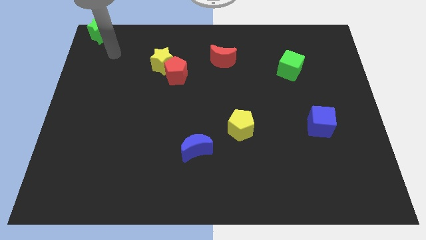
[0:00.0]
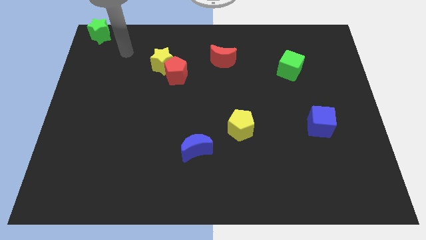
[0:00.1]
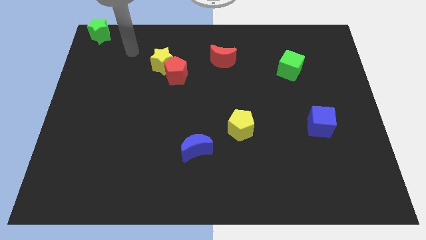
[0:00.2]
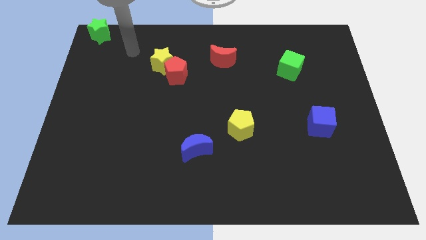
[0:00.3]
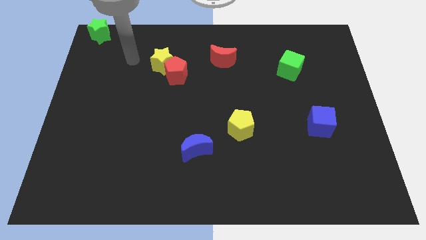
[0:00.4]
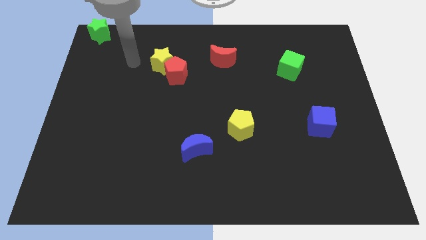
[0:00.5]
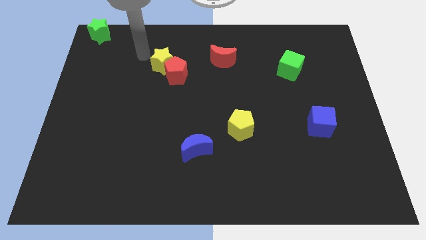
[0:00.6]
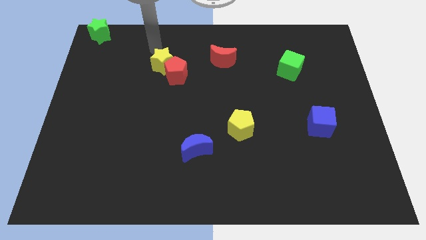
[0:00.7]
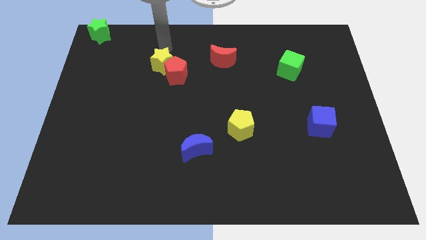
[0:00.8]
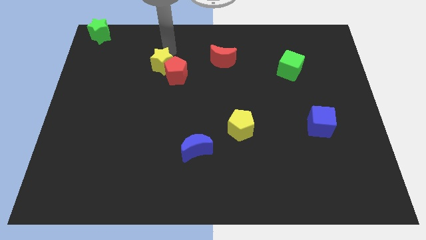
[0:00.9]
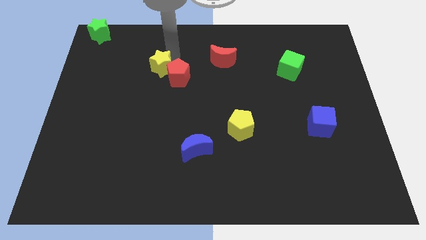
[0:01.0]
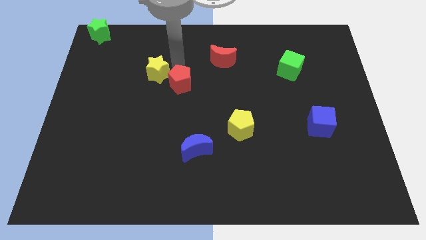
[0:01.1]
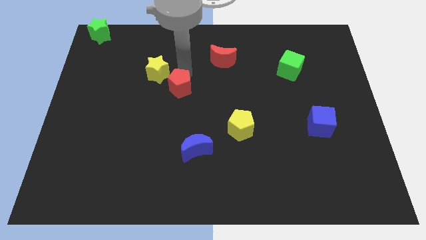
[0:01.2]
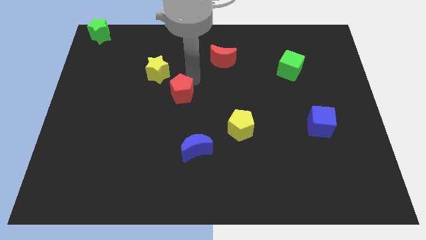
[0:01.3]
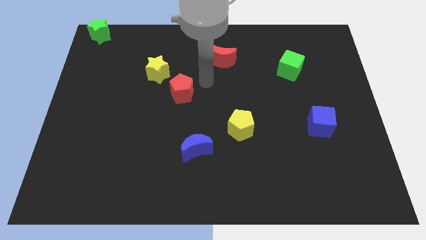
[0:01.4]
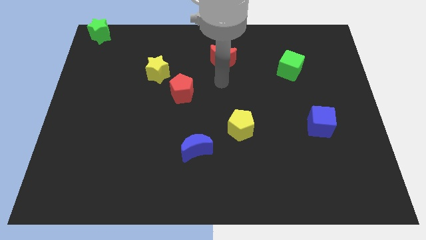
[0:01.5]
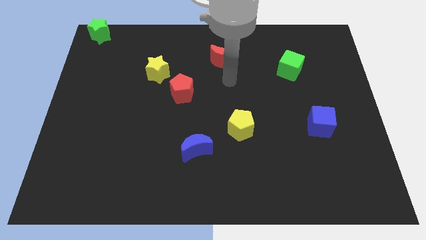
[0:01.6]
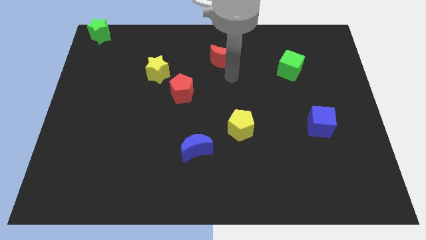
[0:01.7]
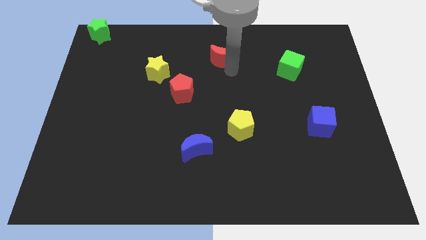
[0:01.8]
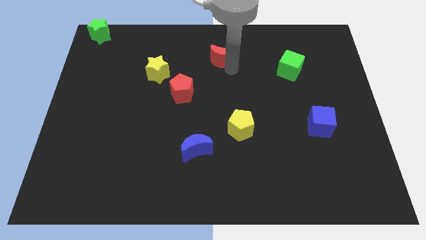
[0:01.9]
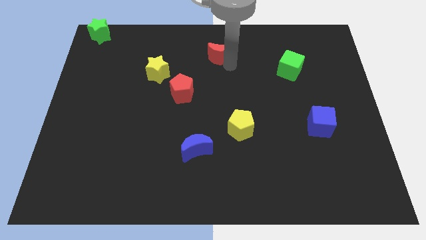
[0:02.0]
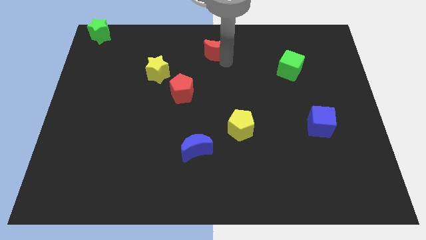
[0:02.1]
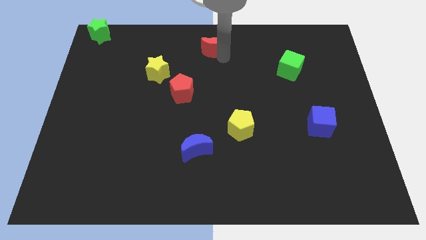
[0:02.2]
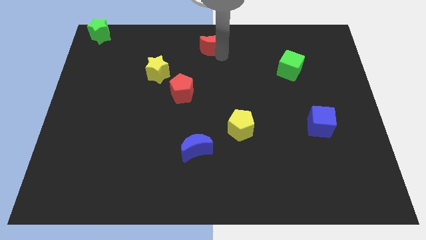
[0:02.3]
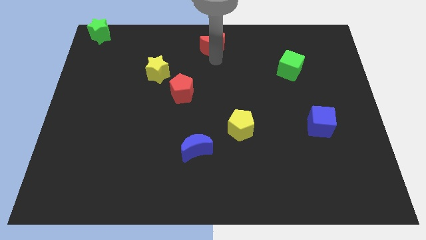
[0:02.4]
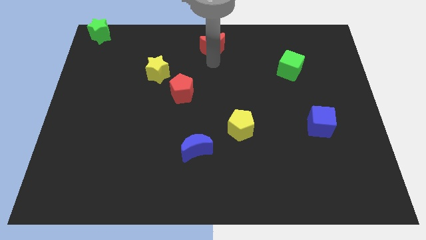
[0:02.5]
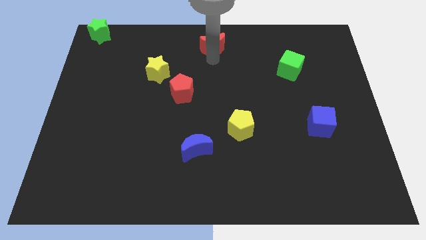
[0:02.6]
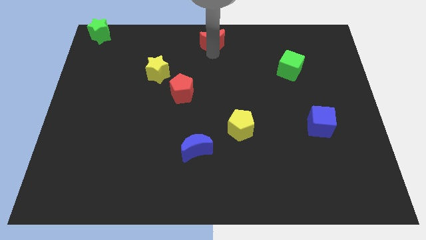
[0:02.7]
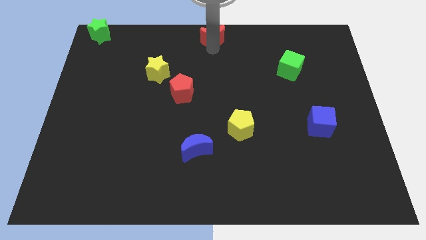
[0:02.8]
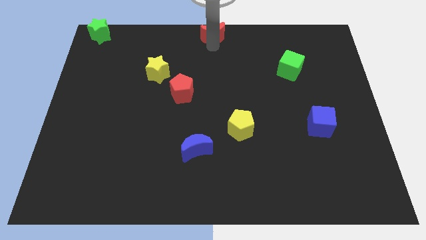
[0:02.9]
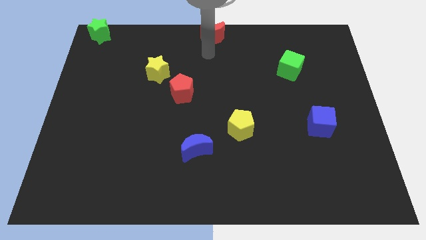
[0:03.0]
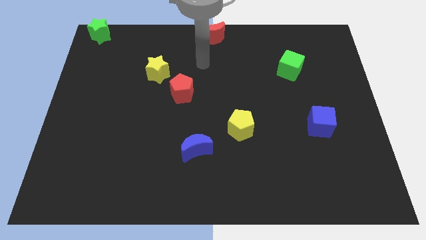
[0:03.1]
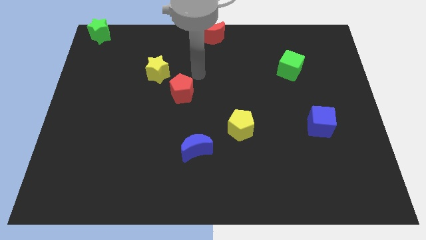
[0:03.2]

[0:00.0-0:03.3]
place the red moon at the top center of the board

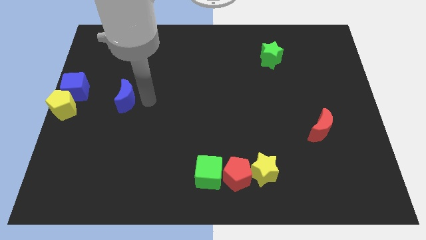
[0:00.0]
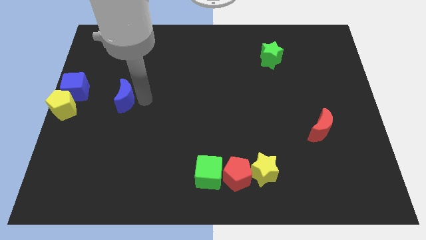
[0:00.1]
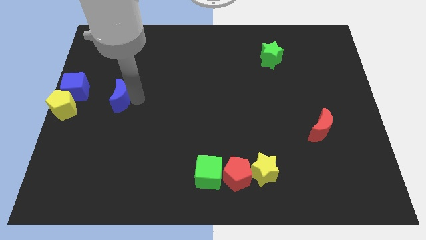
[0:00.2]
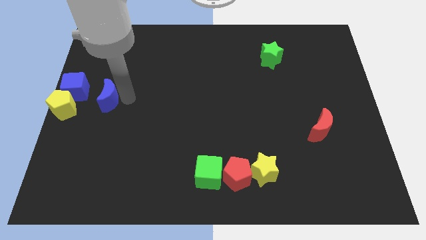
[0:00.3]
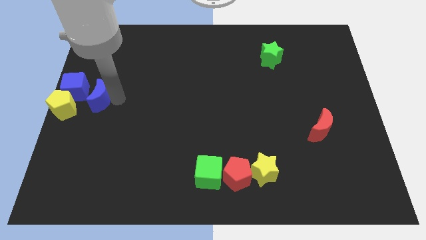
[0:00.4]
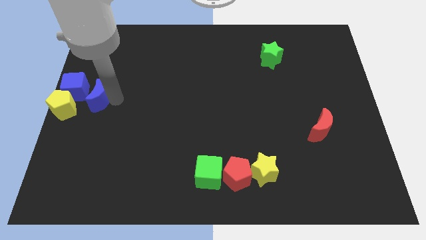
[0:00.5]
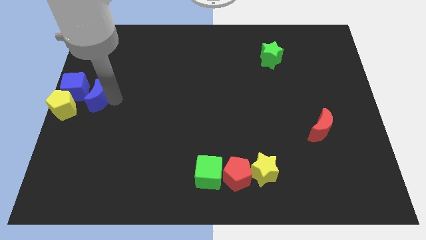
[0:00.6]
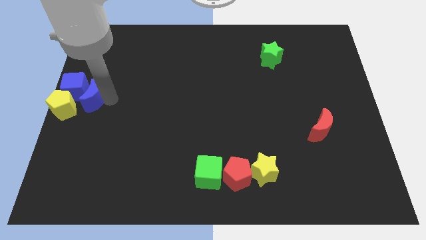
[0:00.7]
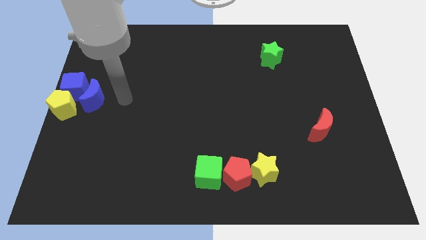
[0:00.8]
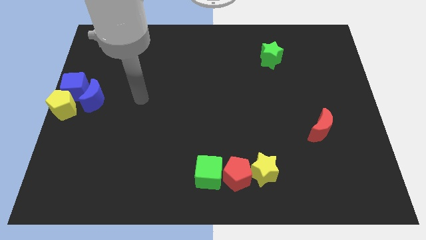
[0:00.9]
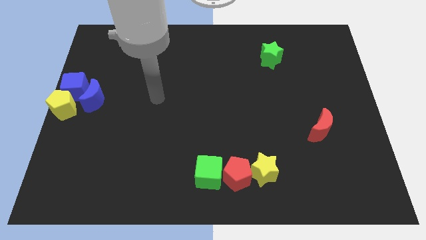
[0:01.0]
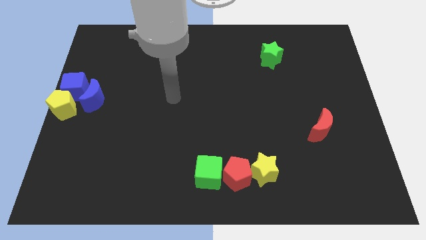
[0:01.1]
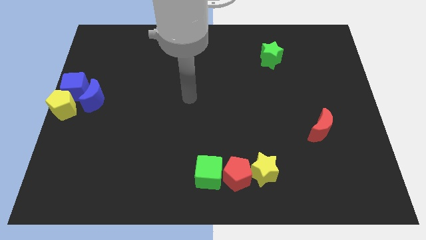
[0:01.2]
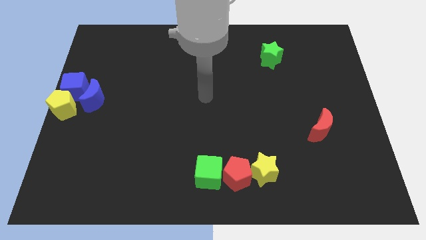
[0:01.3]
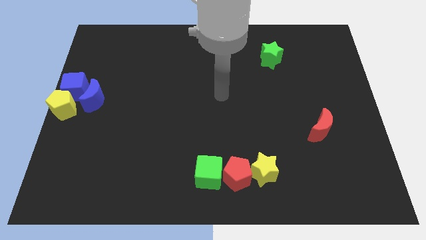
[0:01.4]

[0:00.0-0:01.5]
place the blue crescent to the right of the blue cube

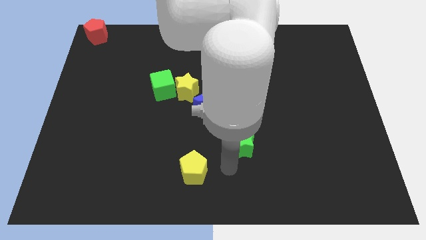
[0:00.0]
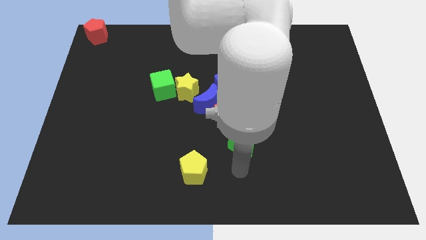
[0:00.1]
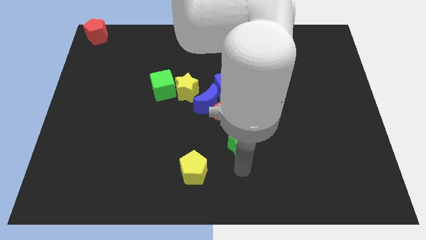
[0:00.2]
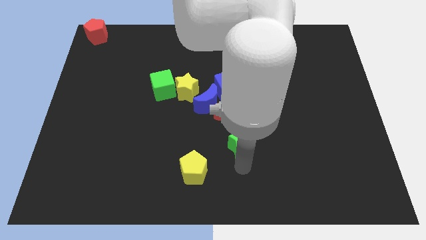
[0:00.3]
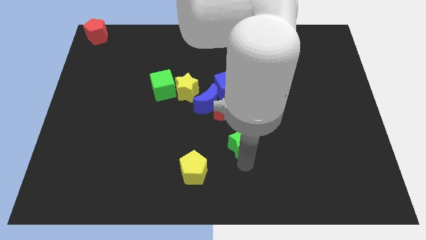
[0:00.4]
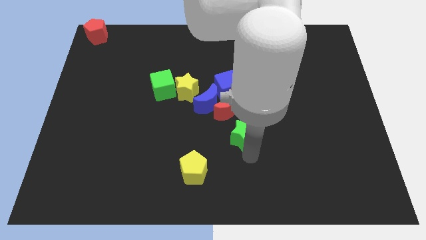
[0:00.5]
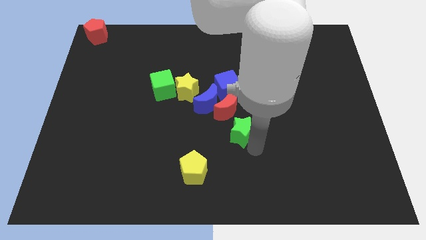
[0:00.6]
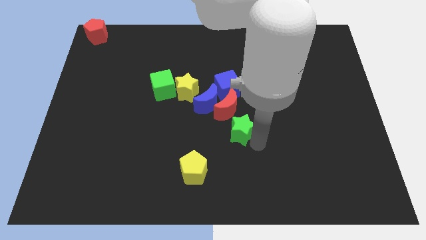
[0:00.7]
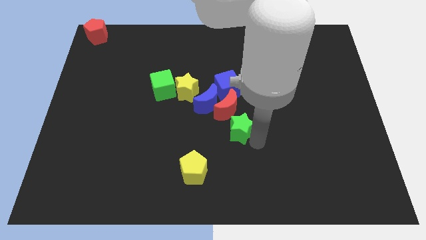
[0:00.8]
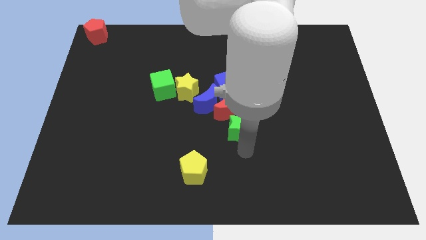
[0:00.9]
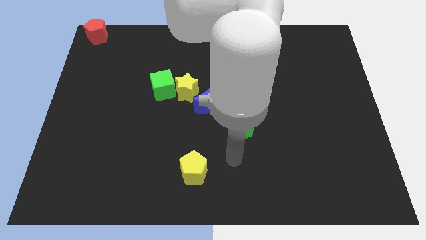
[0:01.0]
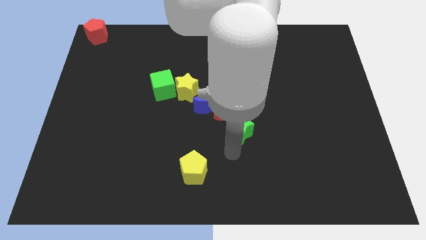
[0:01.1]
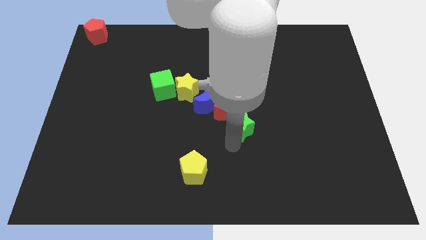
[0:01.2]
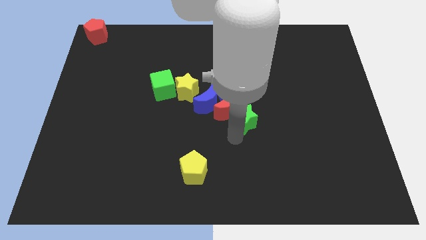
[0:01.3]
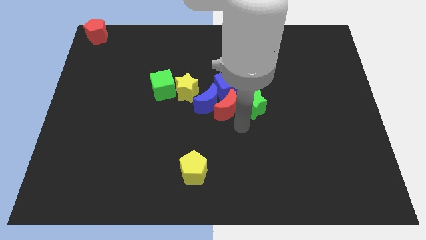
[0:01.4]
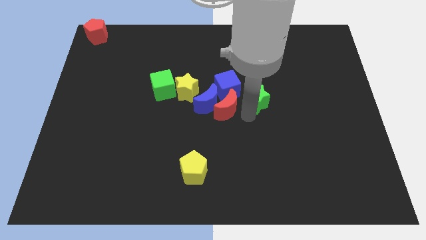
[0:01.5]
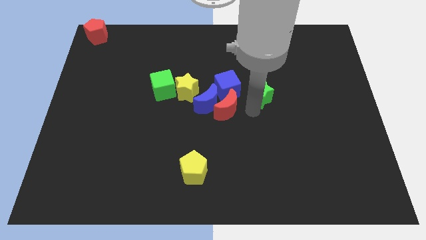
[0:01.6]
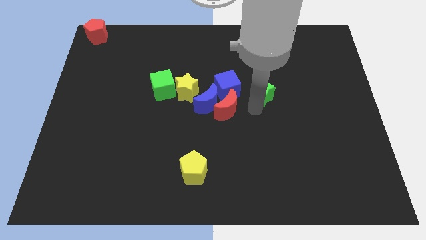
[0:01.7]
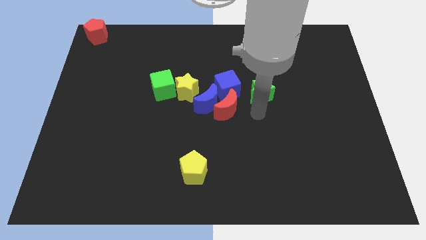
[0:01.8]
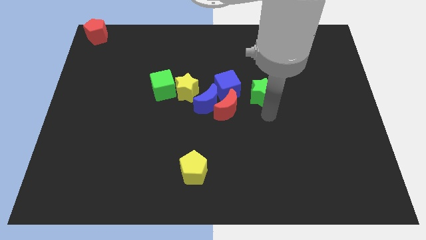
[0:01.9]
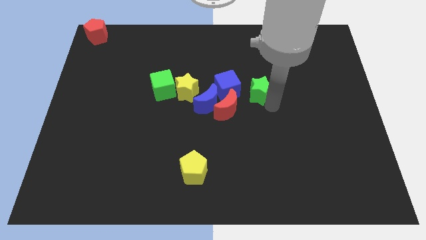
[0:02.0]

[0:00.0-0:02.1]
push the green star to the right of blue cube

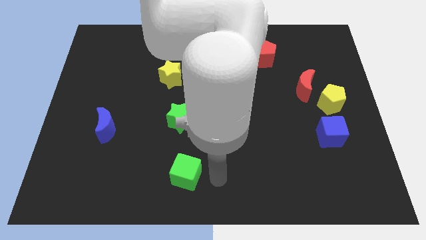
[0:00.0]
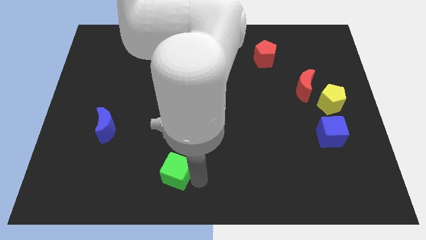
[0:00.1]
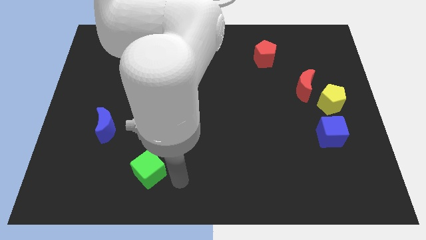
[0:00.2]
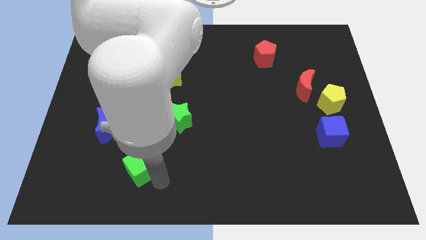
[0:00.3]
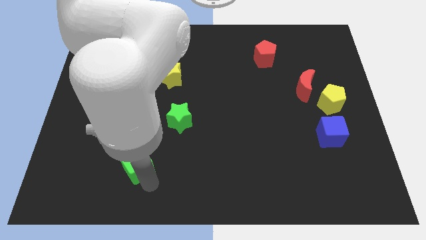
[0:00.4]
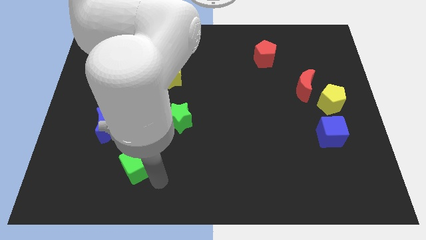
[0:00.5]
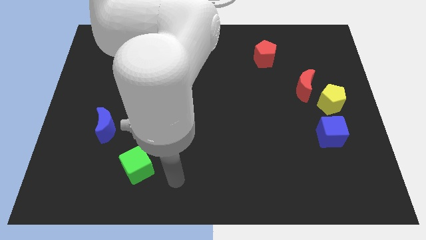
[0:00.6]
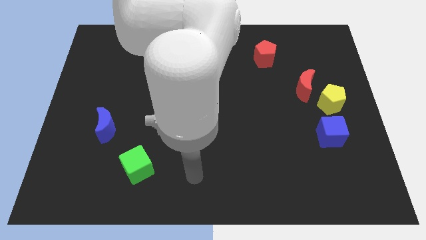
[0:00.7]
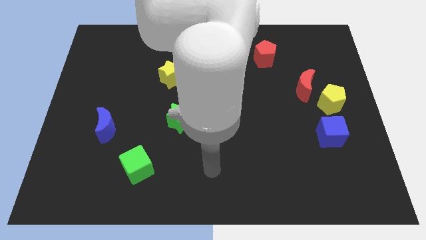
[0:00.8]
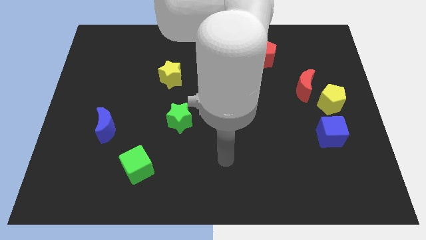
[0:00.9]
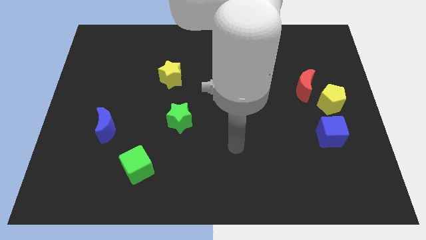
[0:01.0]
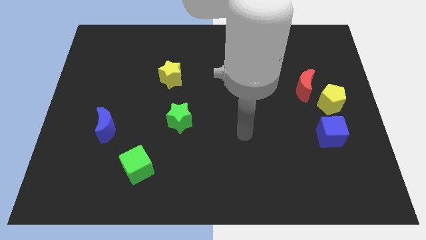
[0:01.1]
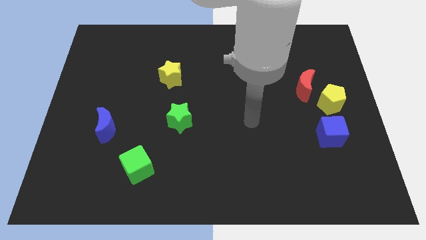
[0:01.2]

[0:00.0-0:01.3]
place the green cube bottom right of the blue moon

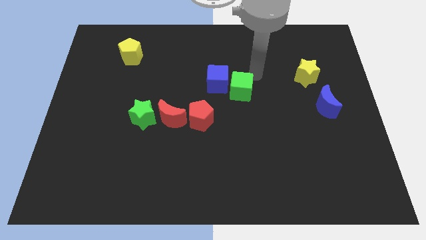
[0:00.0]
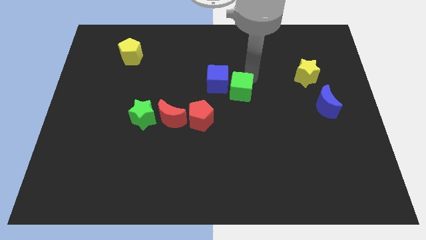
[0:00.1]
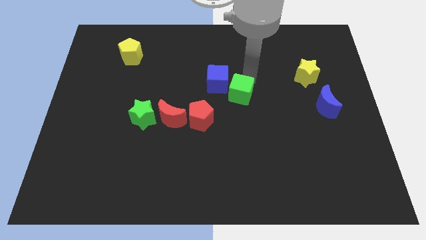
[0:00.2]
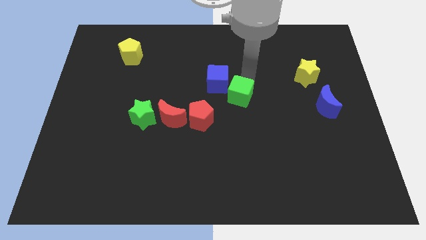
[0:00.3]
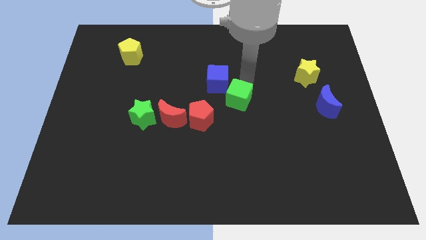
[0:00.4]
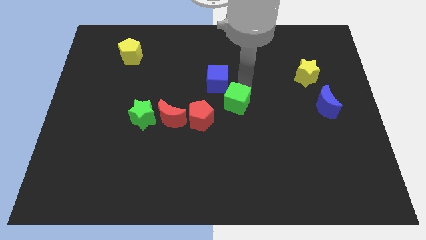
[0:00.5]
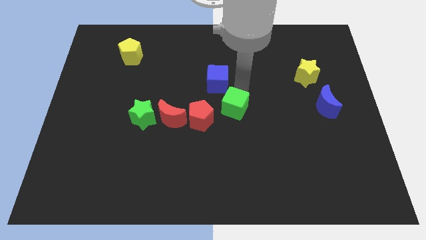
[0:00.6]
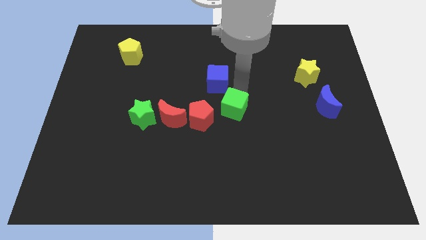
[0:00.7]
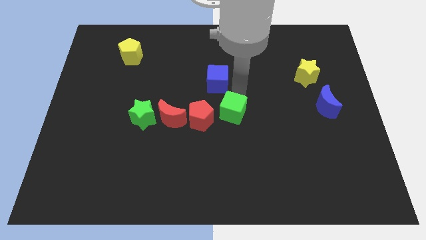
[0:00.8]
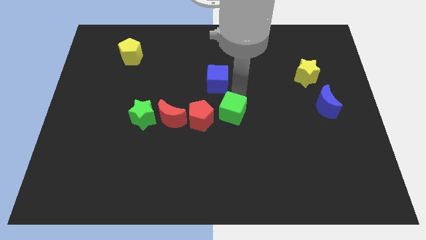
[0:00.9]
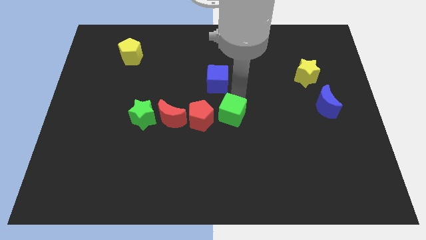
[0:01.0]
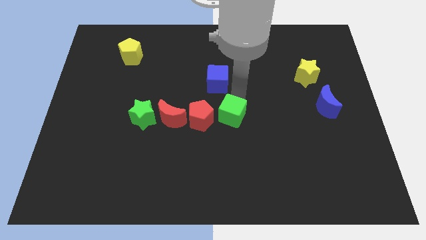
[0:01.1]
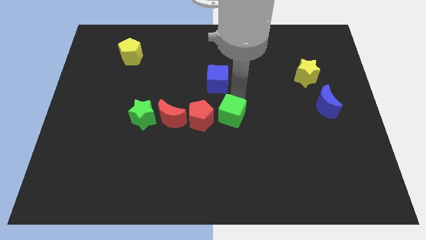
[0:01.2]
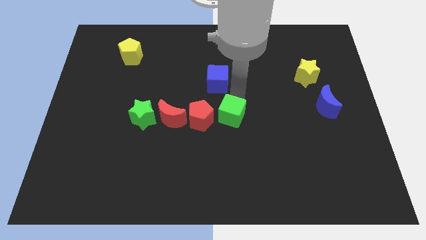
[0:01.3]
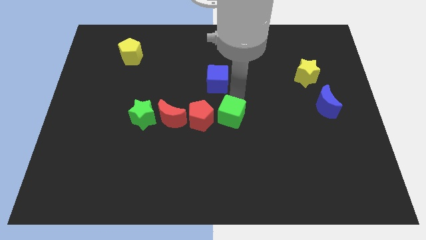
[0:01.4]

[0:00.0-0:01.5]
place the green cube beside the red pentagon
